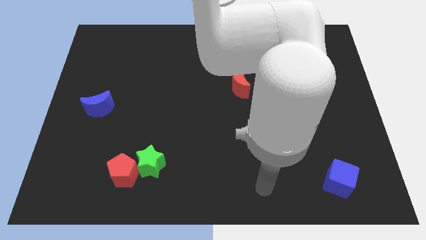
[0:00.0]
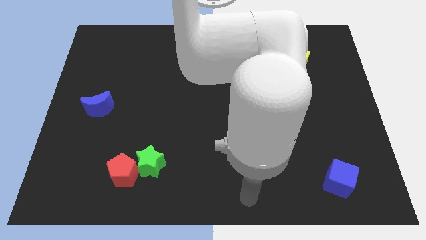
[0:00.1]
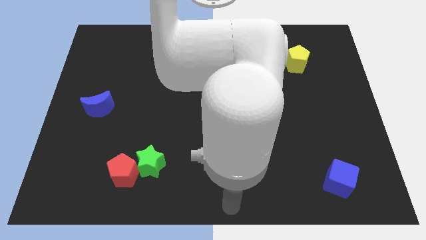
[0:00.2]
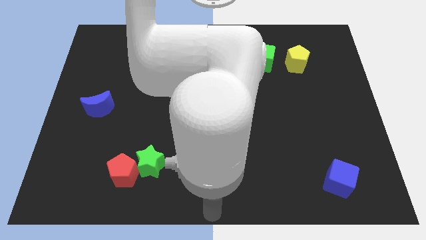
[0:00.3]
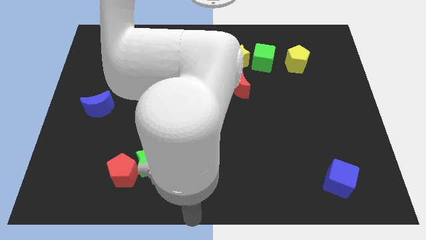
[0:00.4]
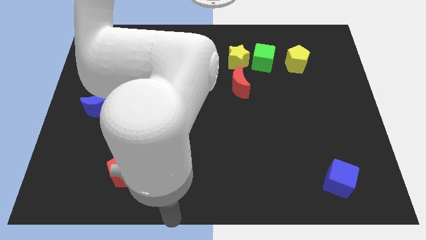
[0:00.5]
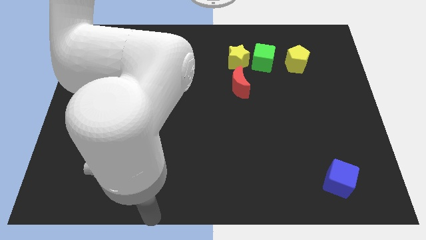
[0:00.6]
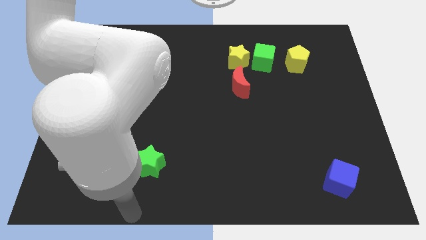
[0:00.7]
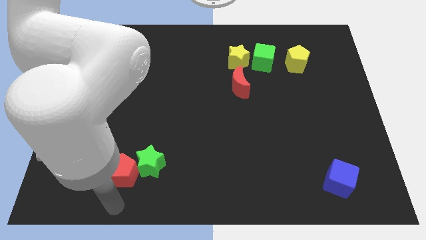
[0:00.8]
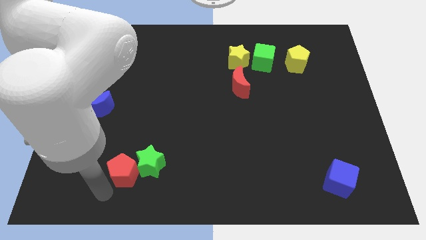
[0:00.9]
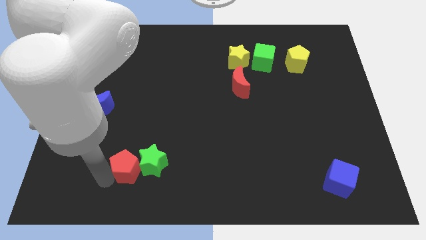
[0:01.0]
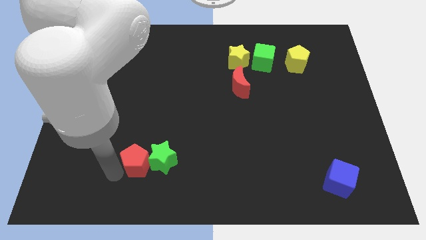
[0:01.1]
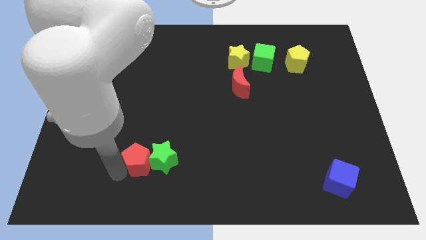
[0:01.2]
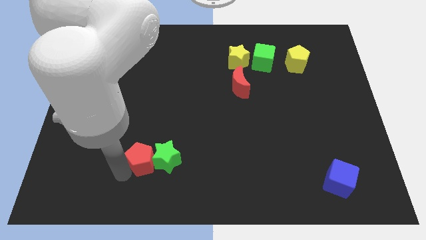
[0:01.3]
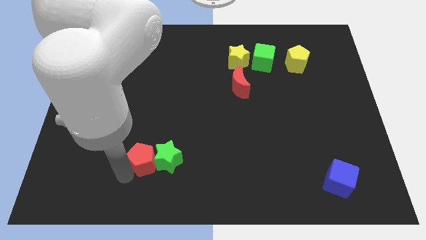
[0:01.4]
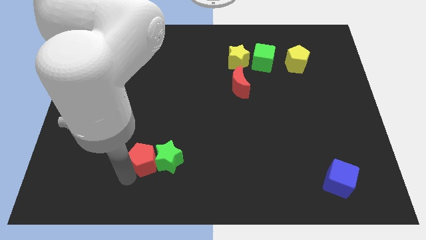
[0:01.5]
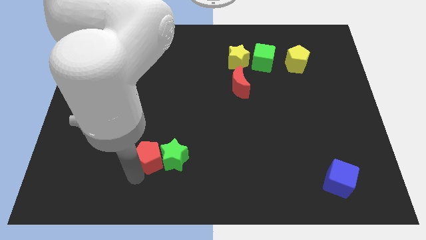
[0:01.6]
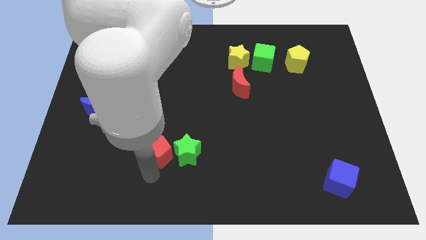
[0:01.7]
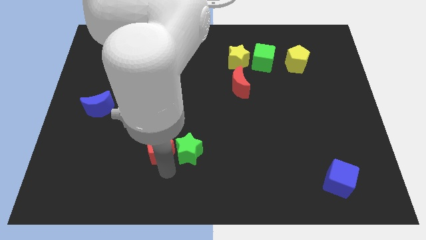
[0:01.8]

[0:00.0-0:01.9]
push the red crescent along with the green star slightly to the right

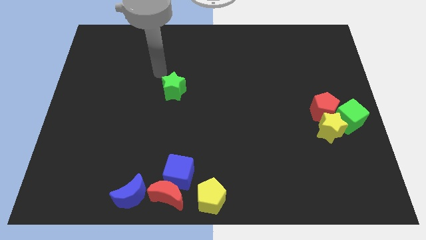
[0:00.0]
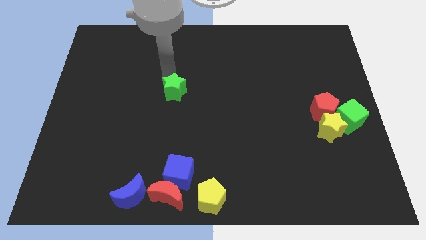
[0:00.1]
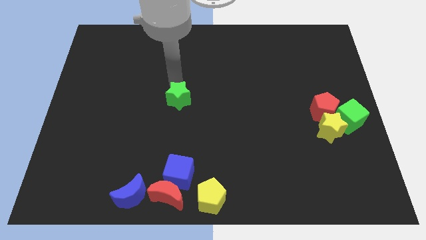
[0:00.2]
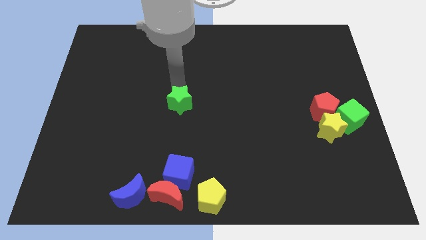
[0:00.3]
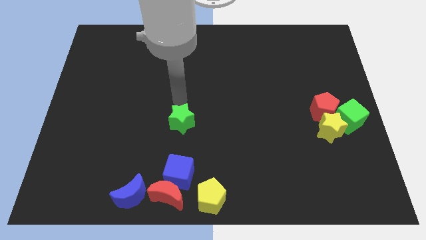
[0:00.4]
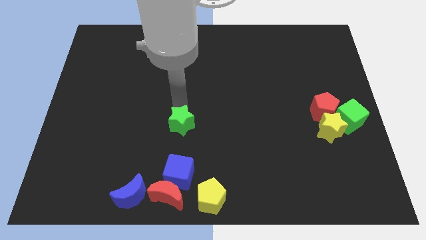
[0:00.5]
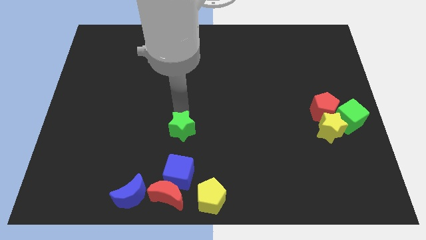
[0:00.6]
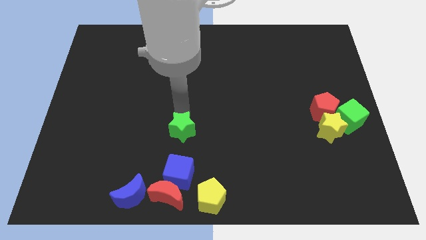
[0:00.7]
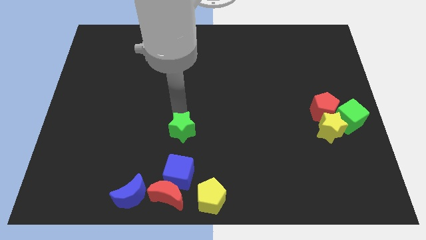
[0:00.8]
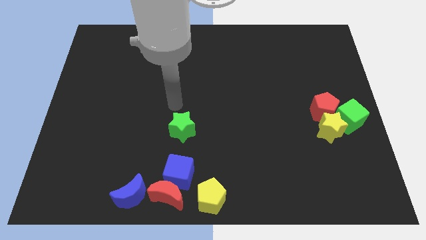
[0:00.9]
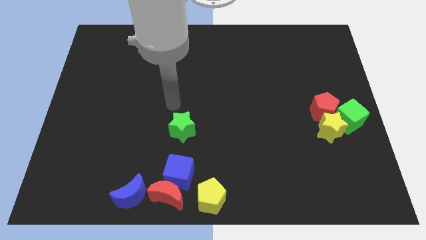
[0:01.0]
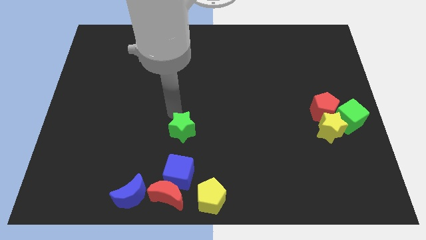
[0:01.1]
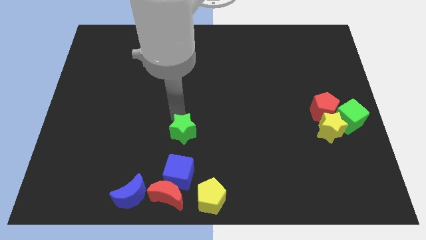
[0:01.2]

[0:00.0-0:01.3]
place green star to the top of the blue cube

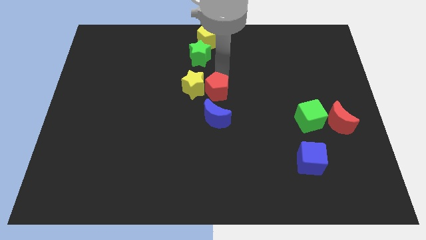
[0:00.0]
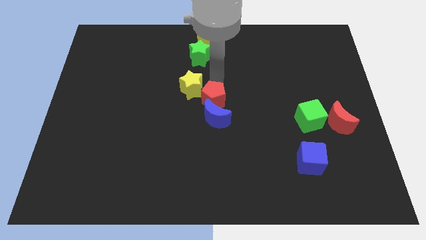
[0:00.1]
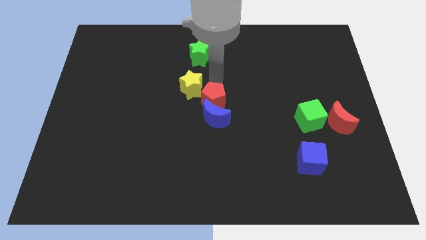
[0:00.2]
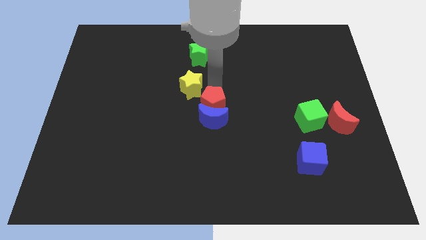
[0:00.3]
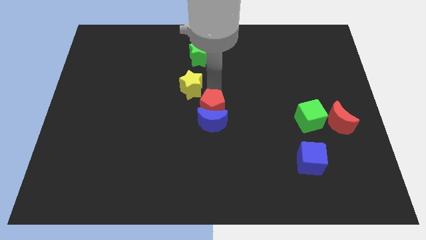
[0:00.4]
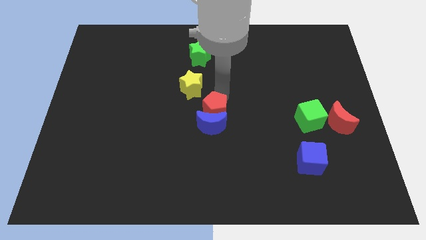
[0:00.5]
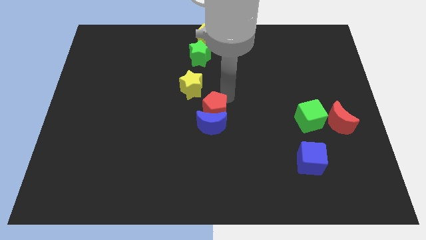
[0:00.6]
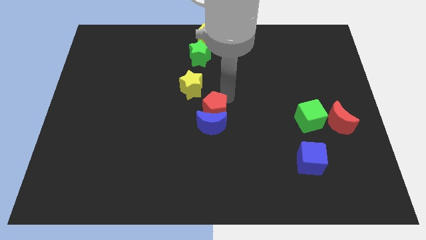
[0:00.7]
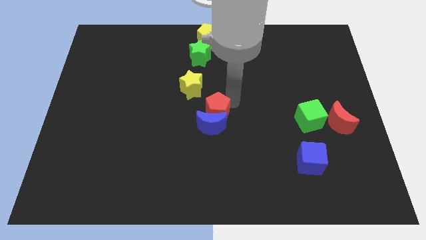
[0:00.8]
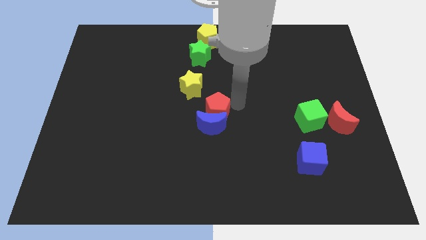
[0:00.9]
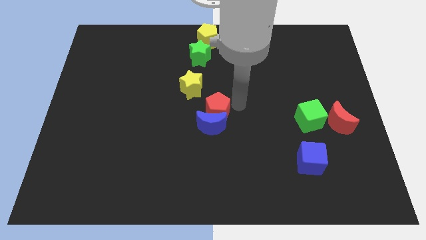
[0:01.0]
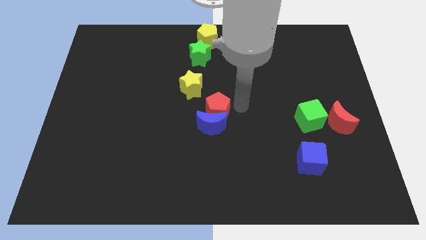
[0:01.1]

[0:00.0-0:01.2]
push the red pentagon into the blue moon

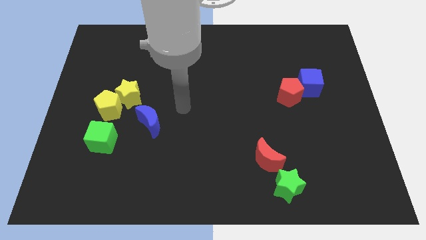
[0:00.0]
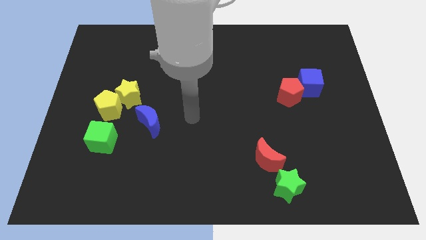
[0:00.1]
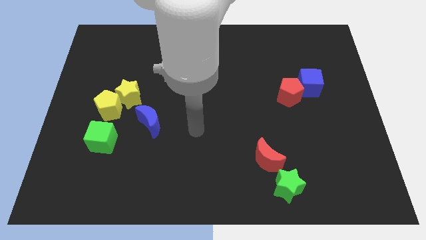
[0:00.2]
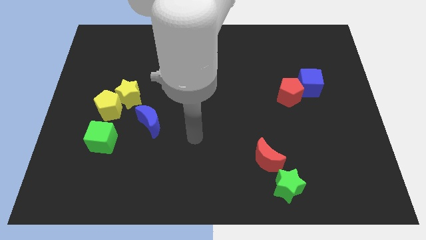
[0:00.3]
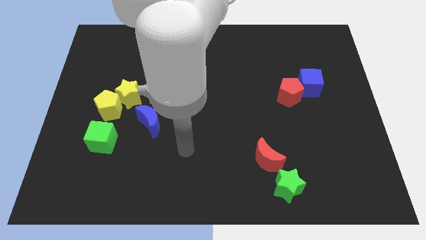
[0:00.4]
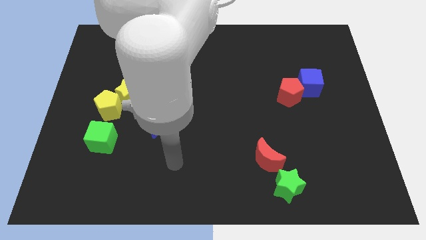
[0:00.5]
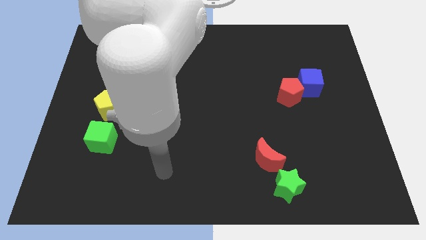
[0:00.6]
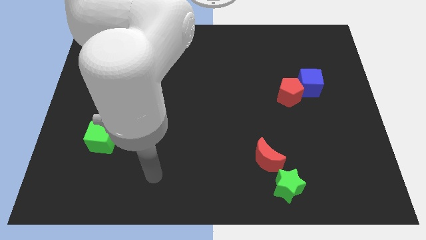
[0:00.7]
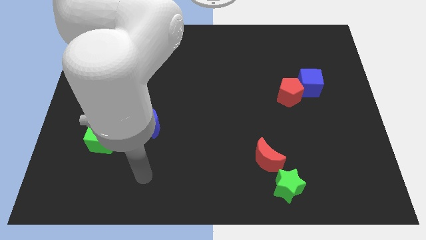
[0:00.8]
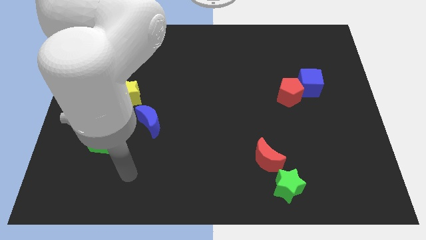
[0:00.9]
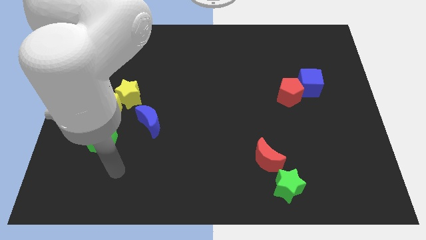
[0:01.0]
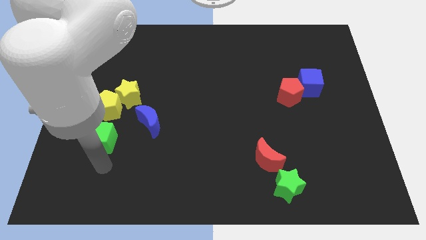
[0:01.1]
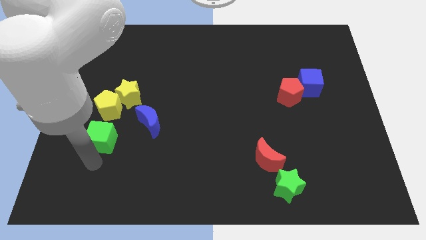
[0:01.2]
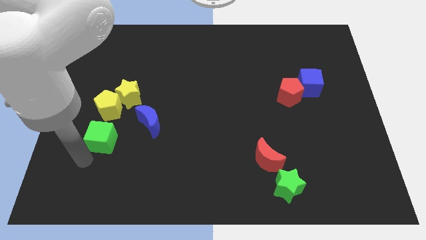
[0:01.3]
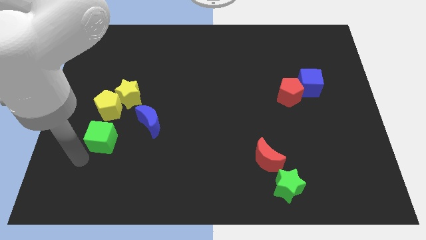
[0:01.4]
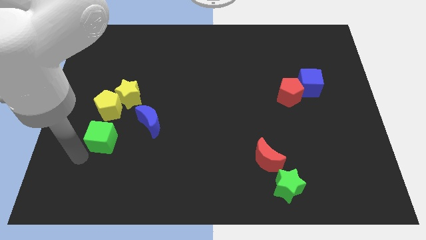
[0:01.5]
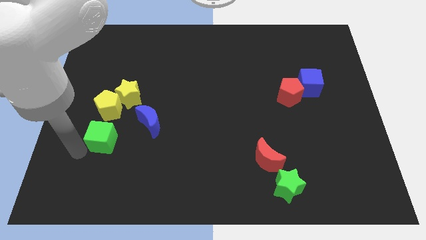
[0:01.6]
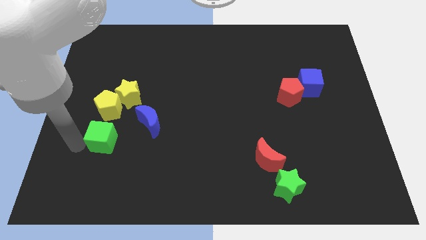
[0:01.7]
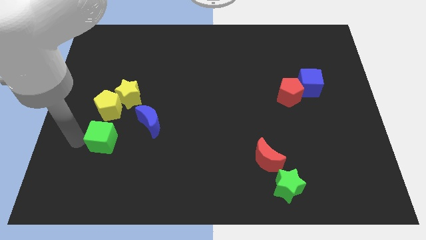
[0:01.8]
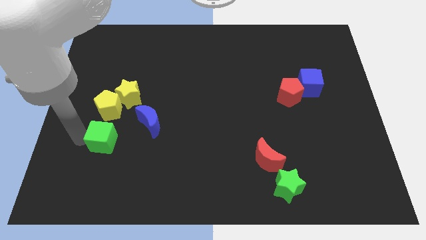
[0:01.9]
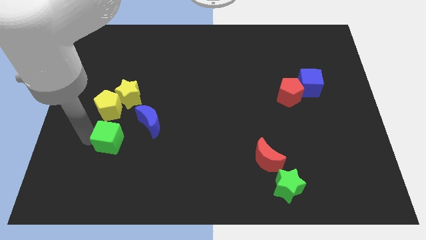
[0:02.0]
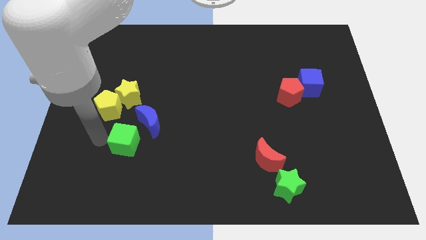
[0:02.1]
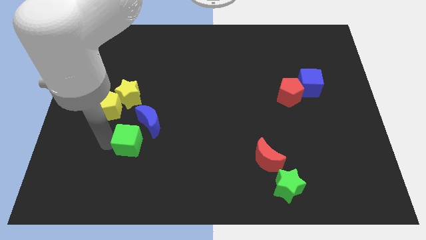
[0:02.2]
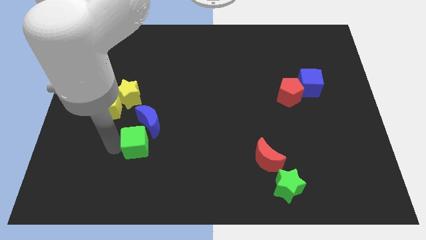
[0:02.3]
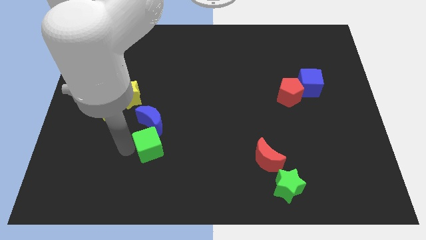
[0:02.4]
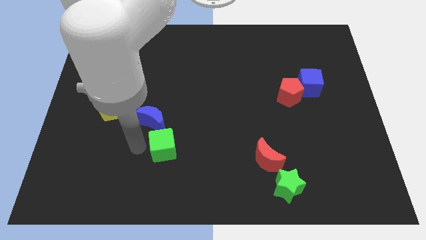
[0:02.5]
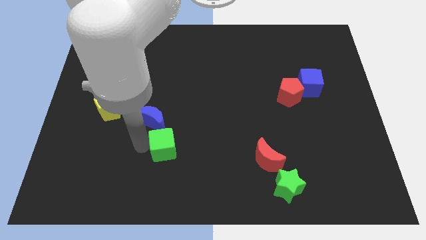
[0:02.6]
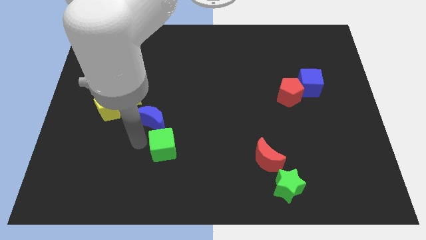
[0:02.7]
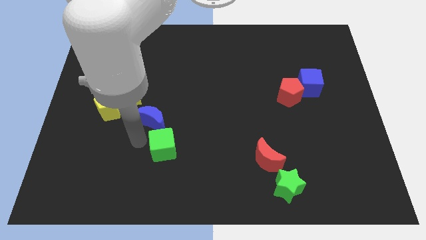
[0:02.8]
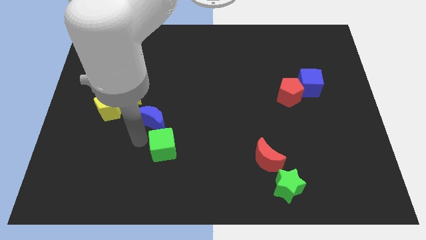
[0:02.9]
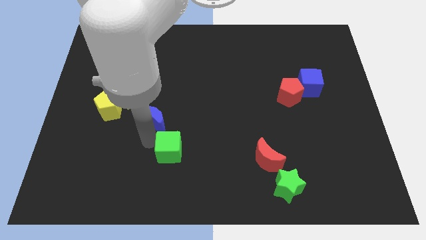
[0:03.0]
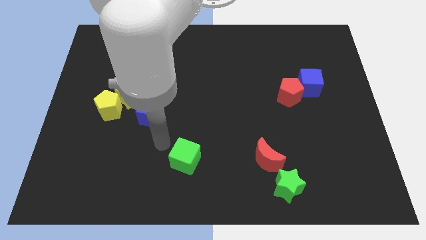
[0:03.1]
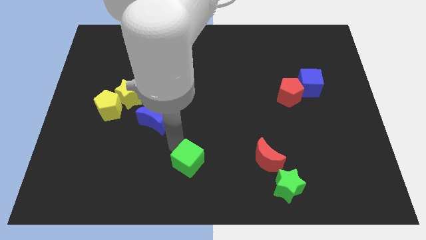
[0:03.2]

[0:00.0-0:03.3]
push the green cube to the left of the red crescent

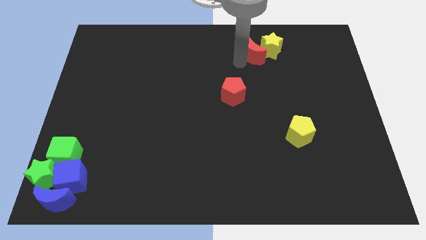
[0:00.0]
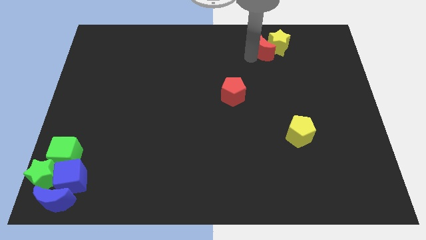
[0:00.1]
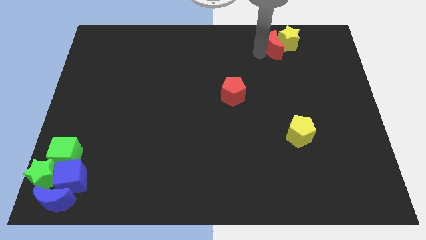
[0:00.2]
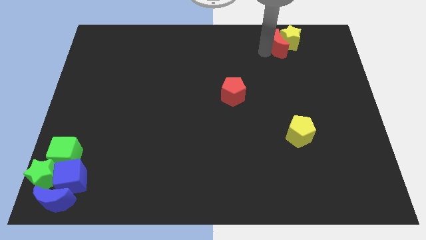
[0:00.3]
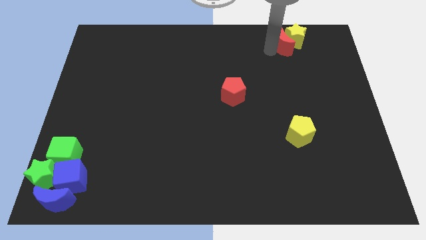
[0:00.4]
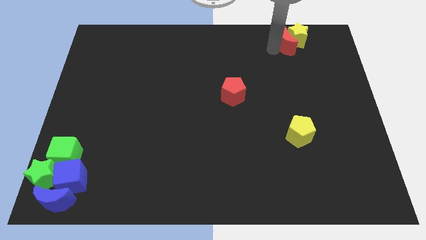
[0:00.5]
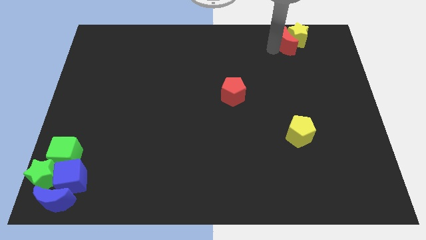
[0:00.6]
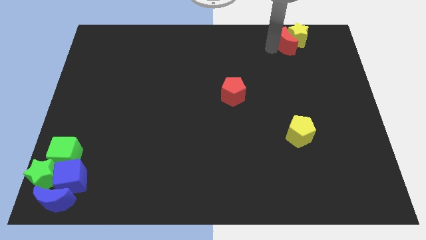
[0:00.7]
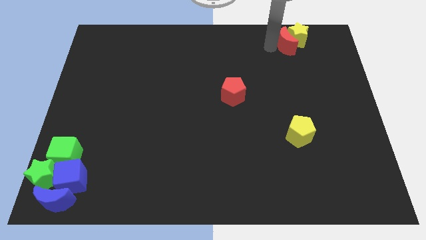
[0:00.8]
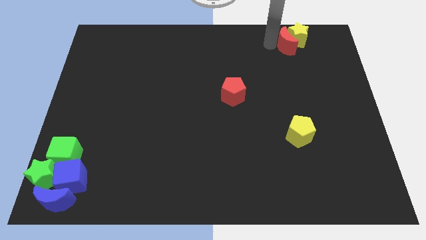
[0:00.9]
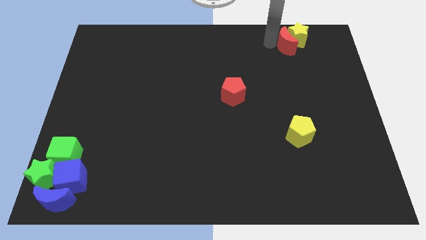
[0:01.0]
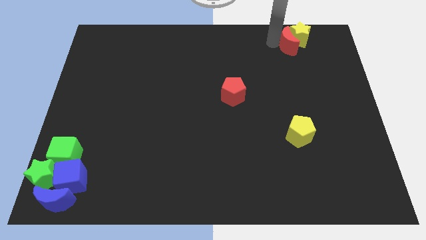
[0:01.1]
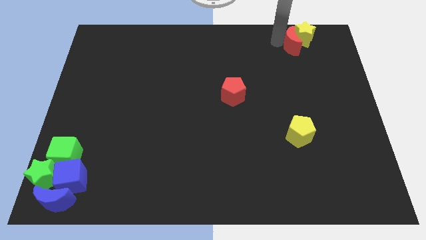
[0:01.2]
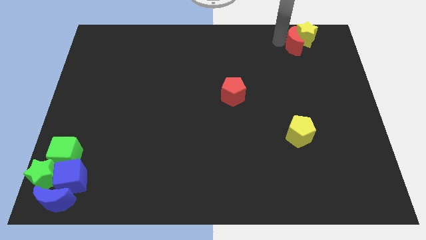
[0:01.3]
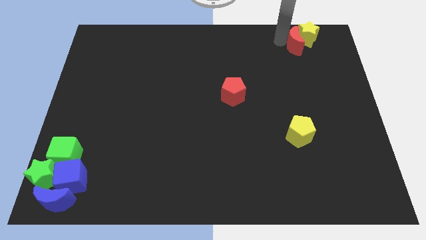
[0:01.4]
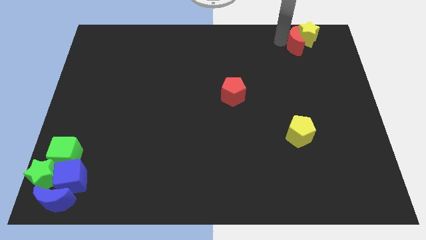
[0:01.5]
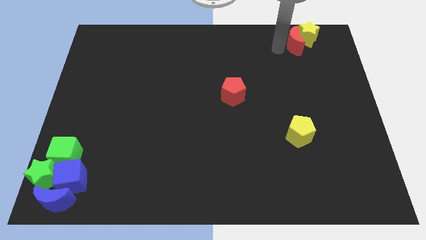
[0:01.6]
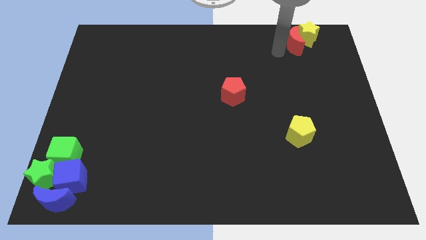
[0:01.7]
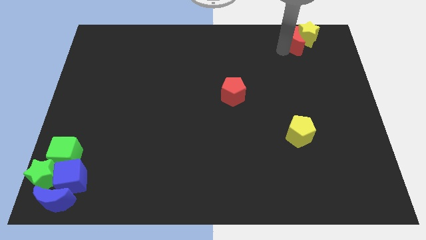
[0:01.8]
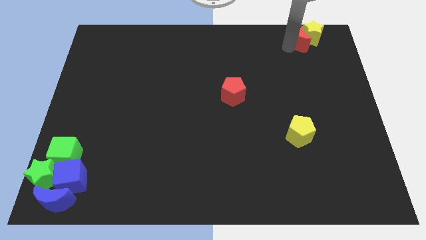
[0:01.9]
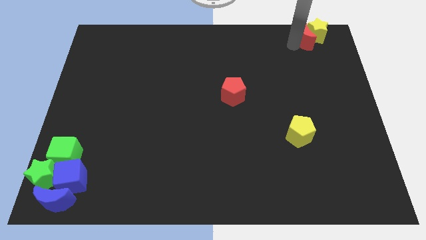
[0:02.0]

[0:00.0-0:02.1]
push red moon along with yellow star towards top right
